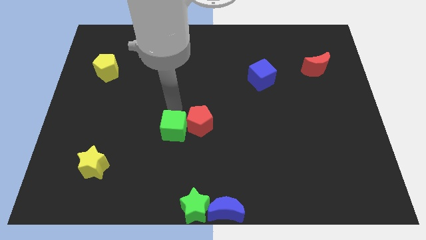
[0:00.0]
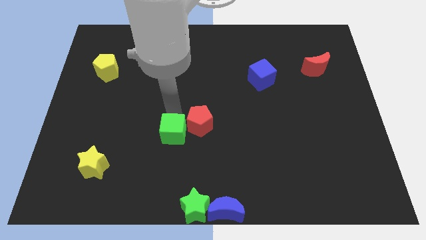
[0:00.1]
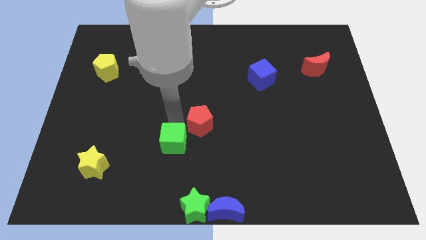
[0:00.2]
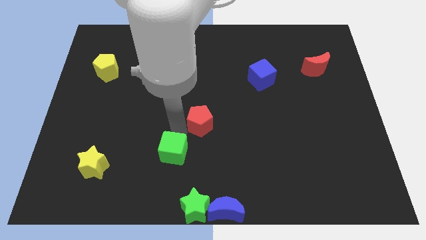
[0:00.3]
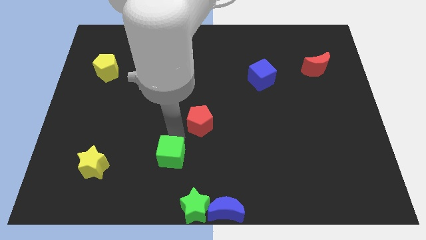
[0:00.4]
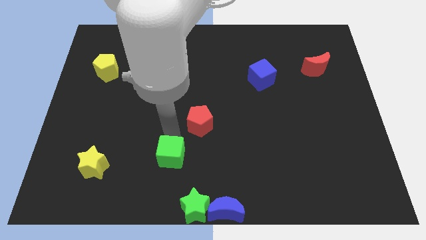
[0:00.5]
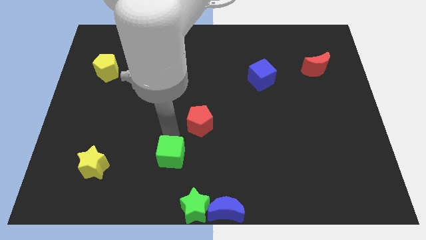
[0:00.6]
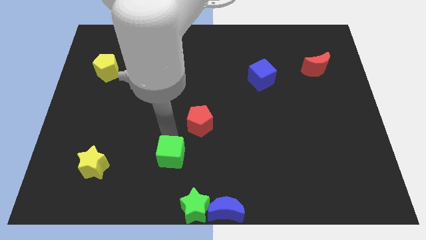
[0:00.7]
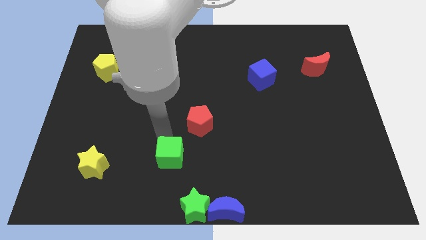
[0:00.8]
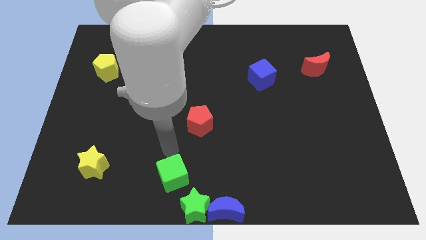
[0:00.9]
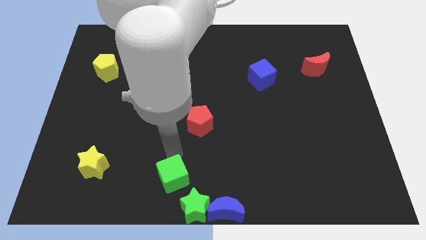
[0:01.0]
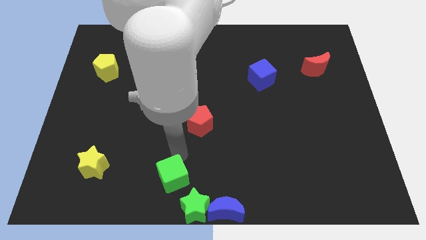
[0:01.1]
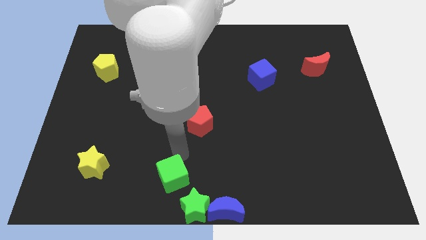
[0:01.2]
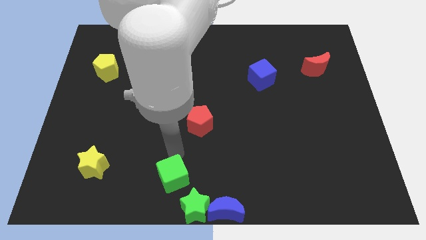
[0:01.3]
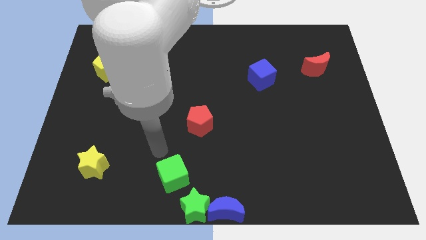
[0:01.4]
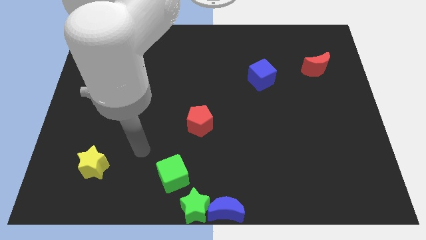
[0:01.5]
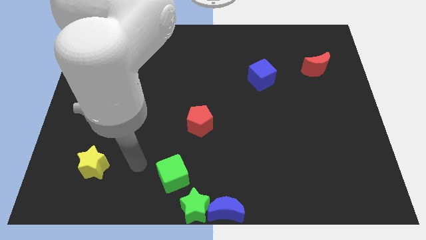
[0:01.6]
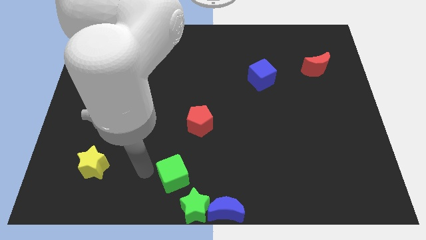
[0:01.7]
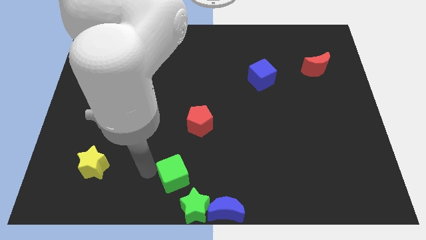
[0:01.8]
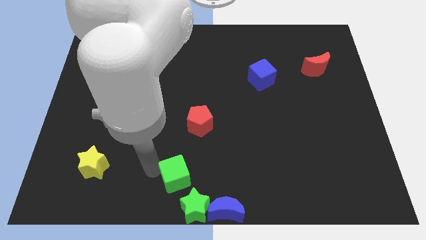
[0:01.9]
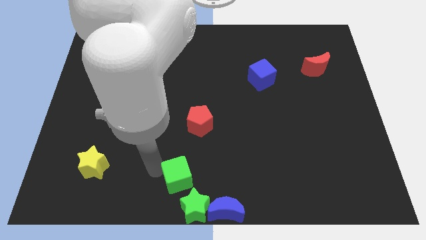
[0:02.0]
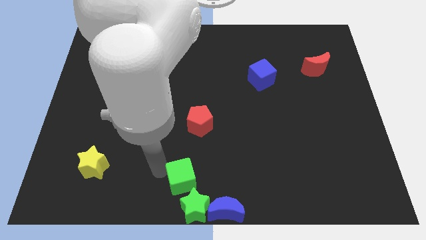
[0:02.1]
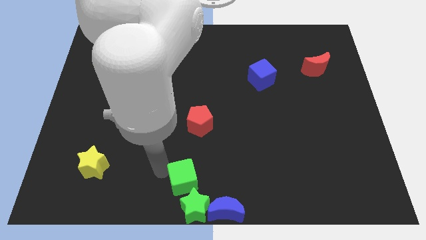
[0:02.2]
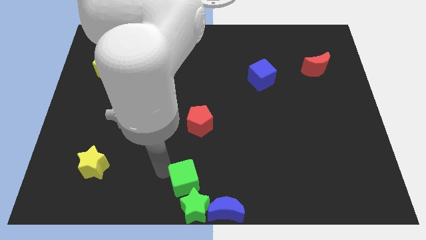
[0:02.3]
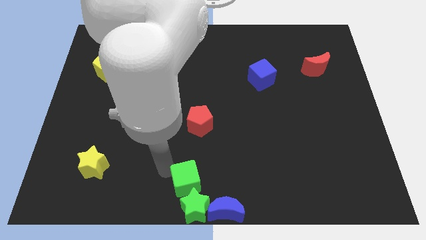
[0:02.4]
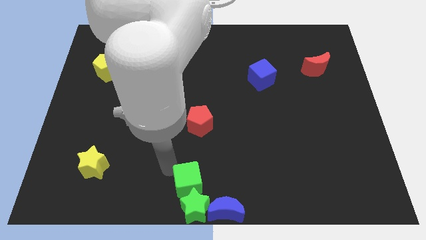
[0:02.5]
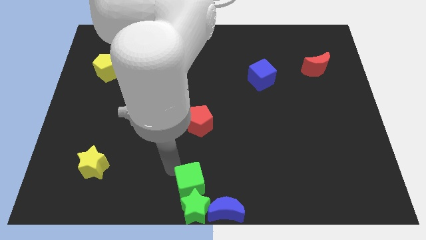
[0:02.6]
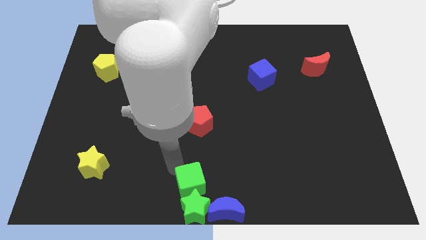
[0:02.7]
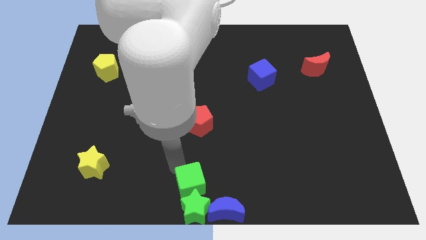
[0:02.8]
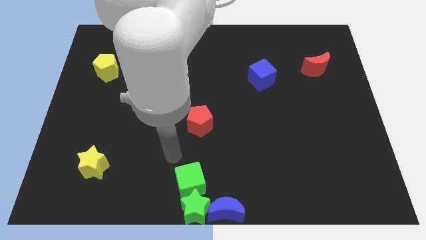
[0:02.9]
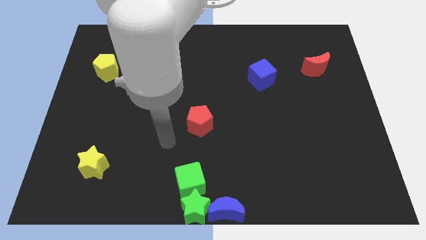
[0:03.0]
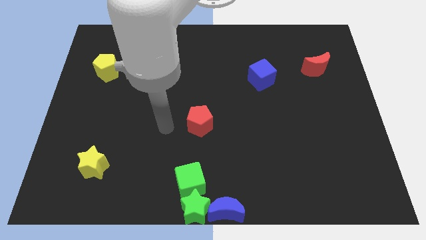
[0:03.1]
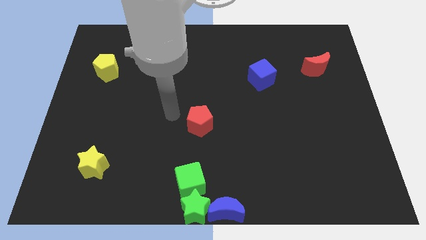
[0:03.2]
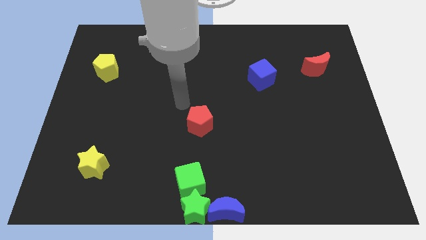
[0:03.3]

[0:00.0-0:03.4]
place the green cube above the green star

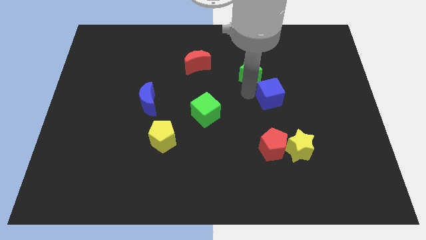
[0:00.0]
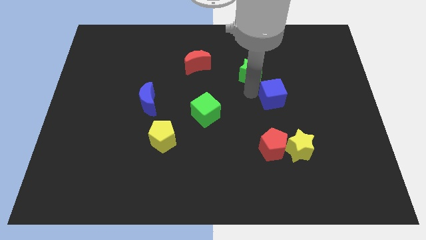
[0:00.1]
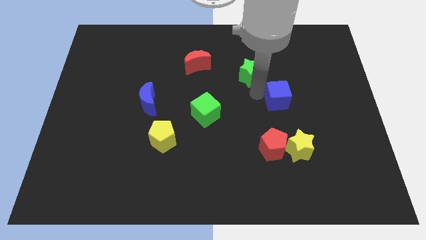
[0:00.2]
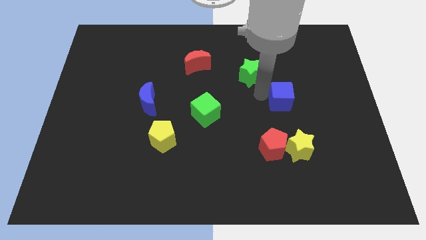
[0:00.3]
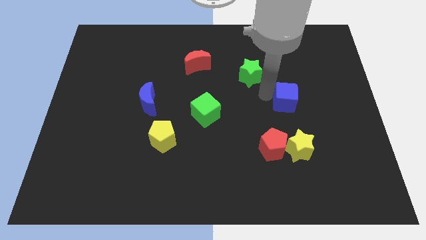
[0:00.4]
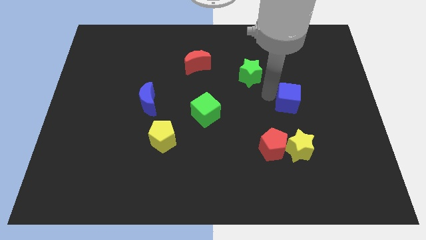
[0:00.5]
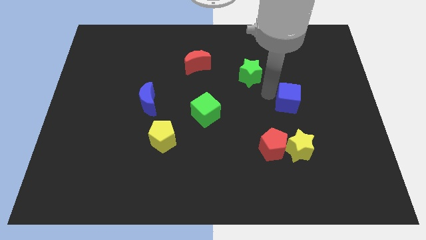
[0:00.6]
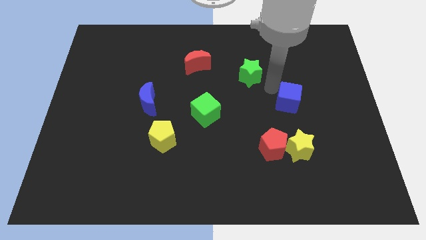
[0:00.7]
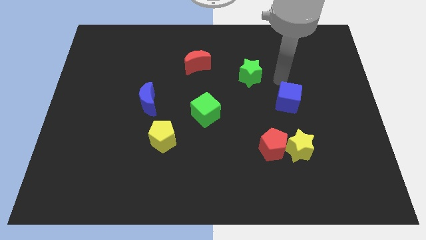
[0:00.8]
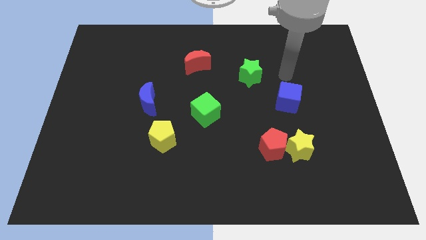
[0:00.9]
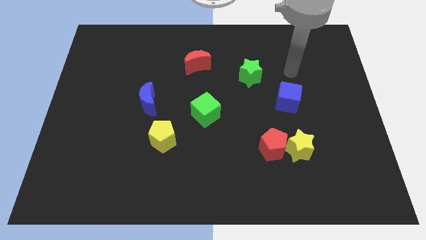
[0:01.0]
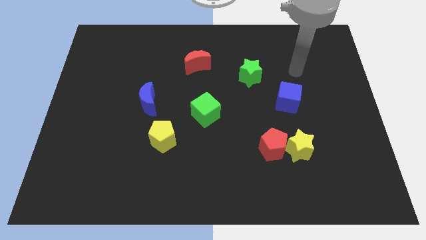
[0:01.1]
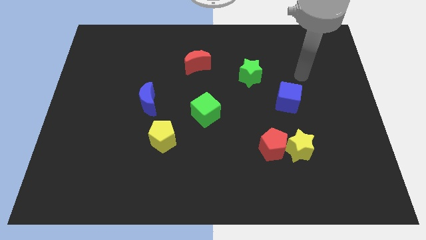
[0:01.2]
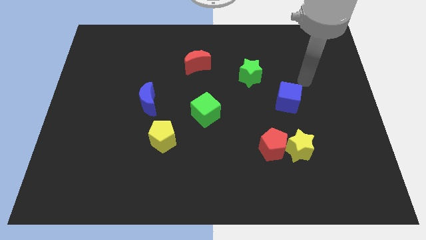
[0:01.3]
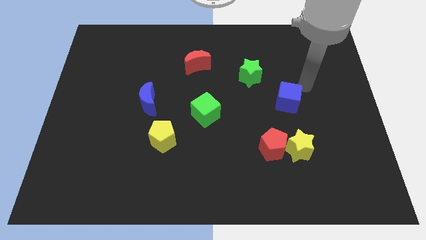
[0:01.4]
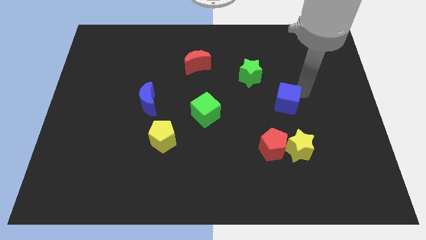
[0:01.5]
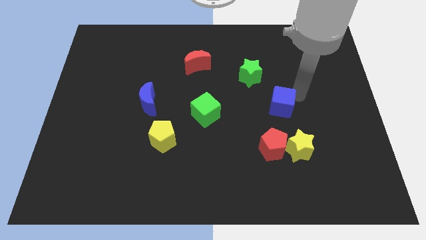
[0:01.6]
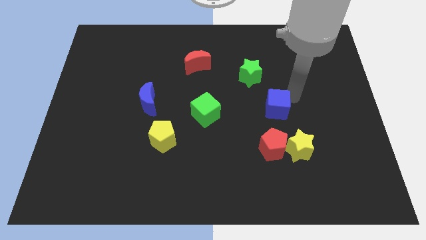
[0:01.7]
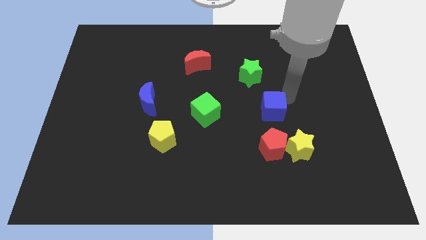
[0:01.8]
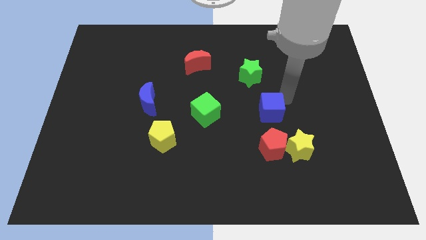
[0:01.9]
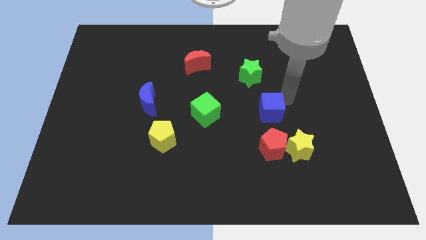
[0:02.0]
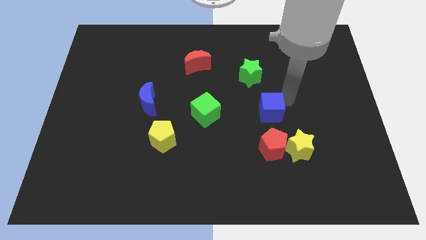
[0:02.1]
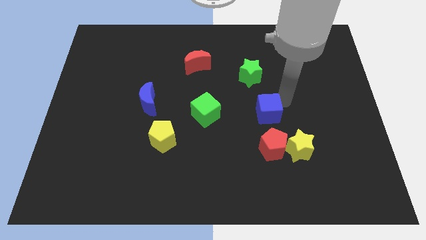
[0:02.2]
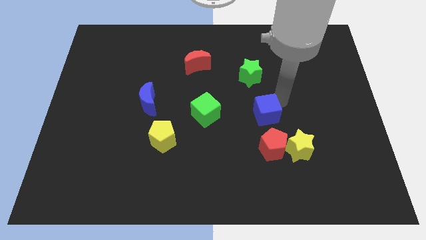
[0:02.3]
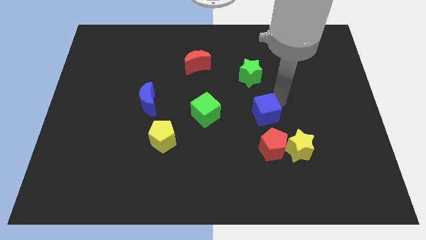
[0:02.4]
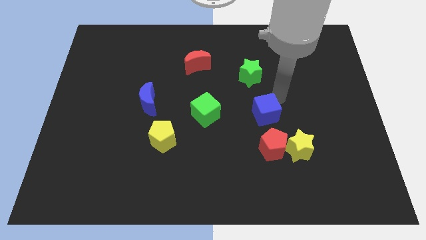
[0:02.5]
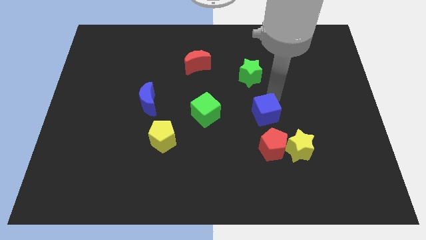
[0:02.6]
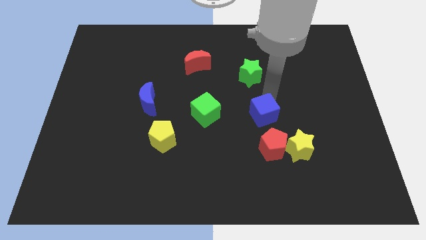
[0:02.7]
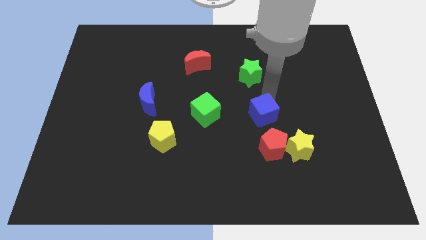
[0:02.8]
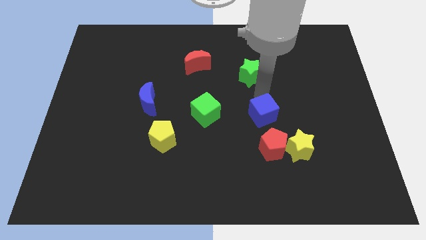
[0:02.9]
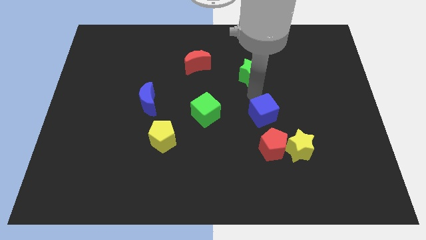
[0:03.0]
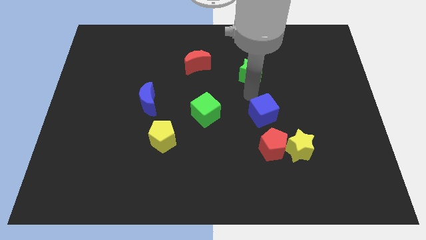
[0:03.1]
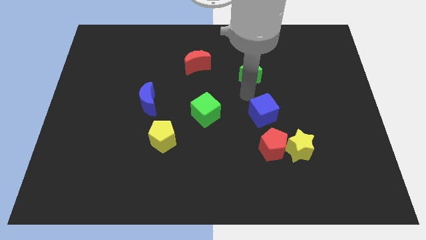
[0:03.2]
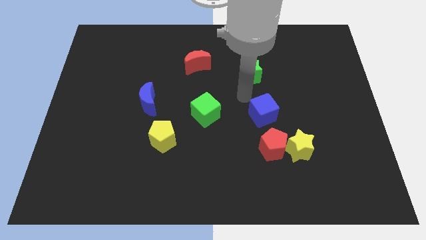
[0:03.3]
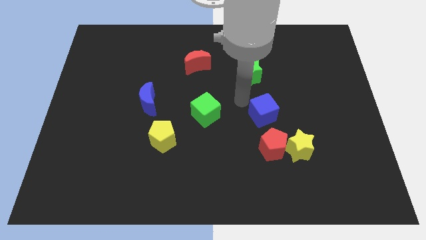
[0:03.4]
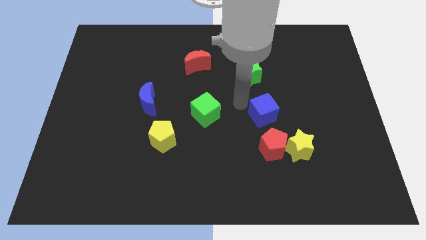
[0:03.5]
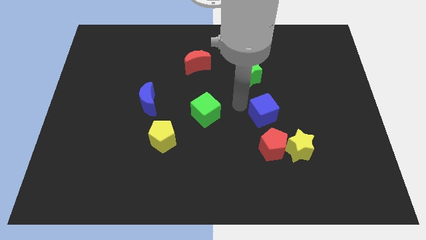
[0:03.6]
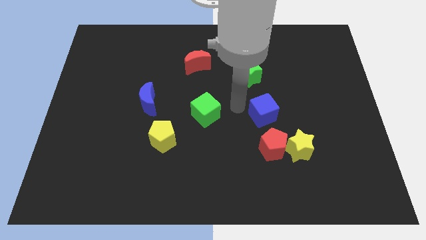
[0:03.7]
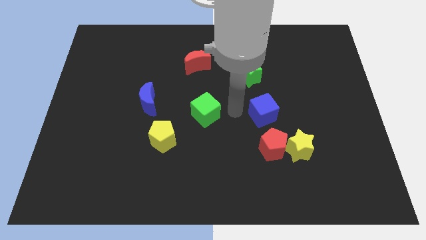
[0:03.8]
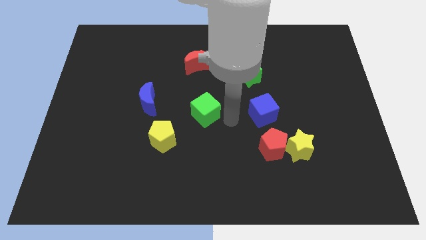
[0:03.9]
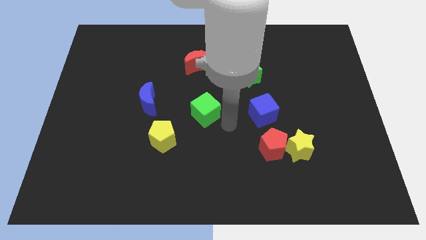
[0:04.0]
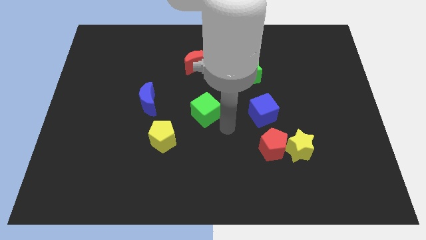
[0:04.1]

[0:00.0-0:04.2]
place the green cube and blue cube in a line horizontally

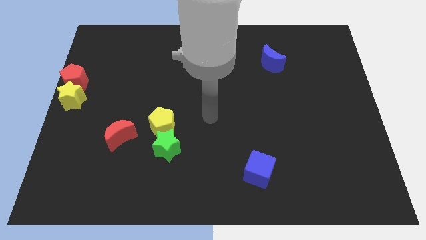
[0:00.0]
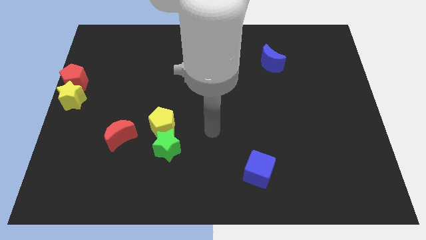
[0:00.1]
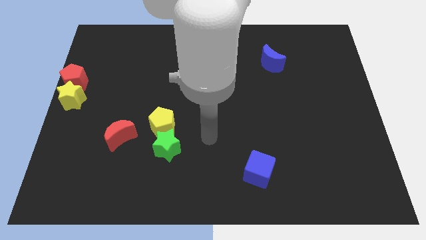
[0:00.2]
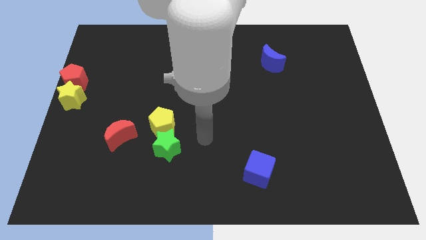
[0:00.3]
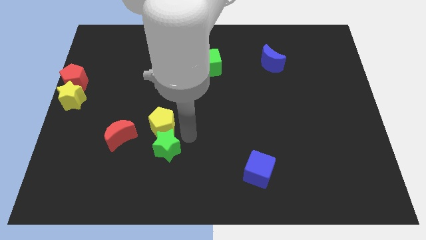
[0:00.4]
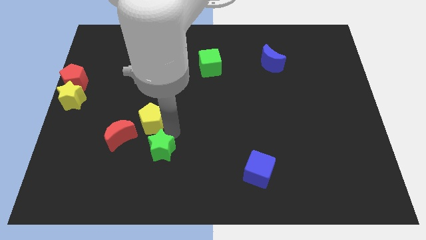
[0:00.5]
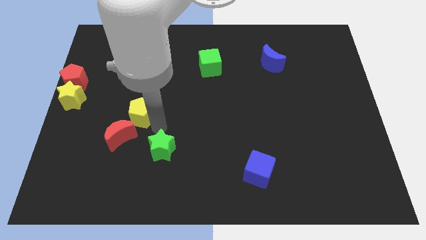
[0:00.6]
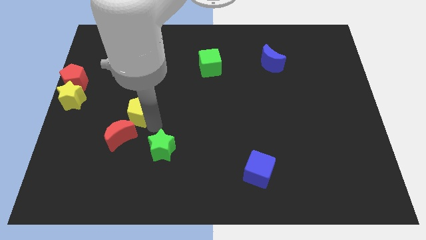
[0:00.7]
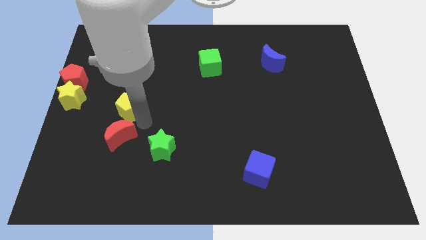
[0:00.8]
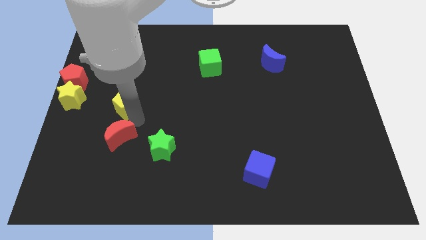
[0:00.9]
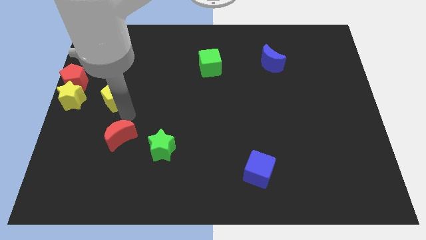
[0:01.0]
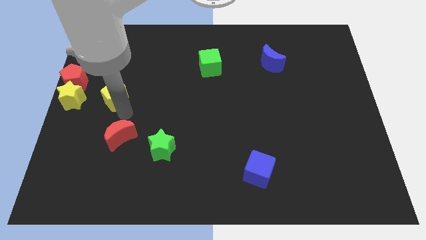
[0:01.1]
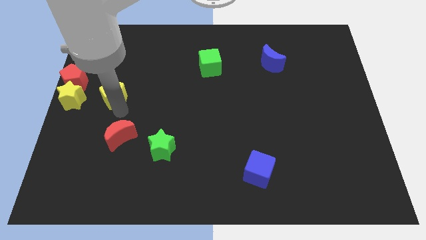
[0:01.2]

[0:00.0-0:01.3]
move the yellow pentagon to the right of the yellow star
